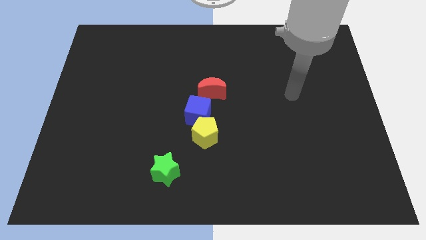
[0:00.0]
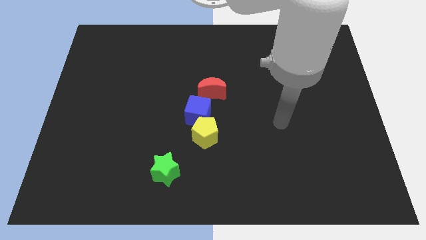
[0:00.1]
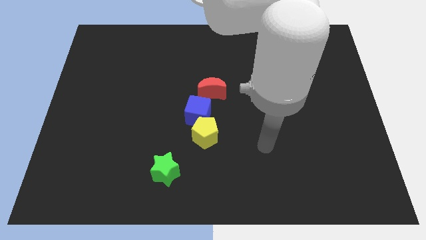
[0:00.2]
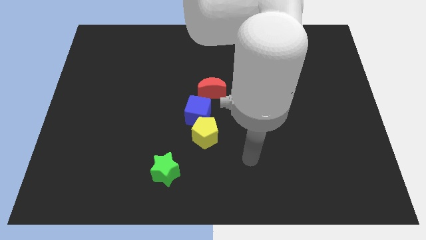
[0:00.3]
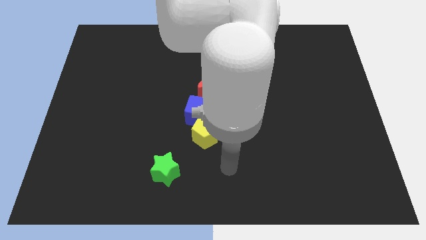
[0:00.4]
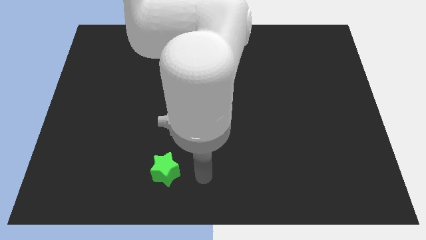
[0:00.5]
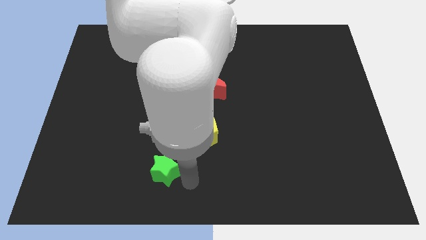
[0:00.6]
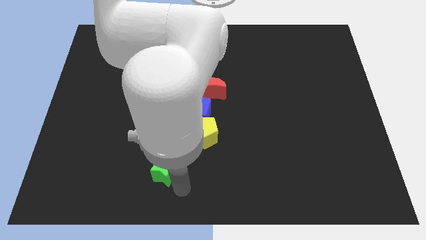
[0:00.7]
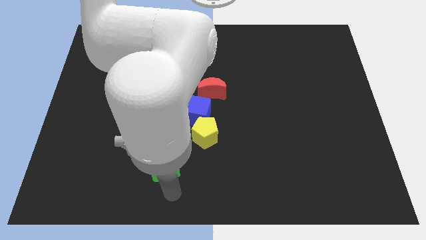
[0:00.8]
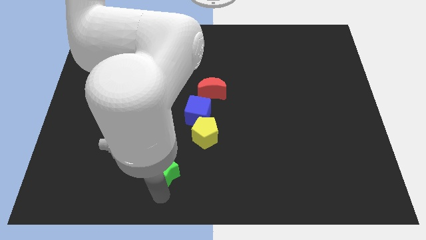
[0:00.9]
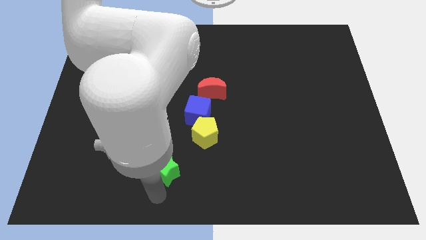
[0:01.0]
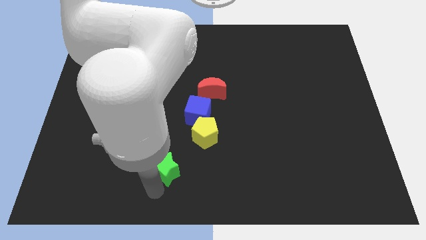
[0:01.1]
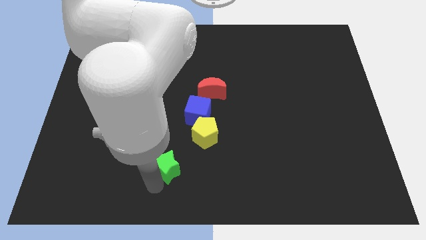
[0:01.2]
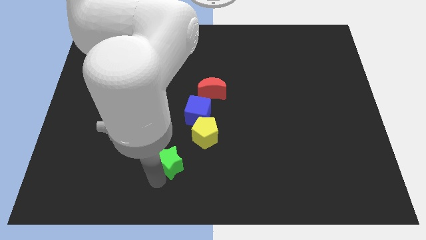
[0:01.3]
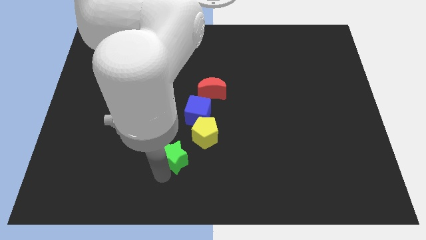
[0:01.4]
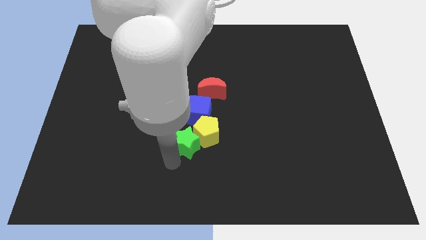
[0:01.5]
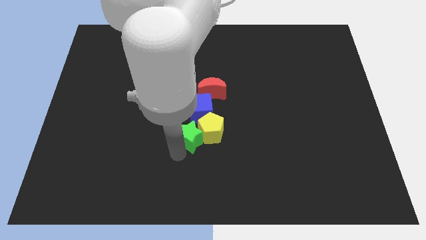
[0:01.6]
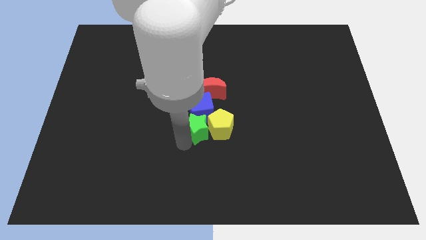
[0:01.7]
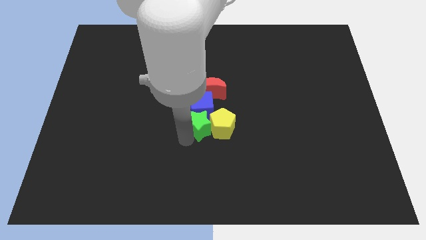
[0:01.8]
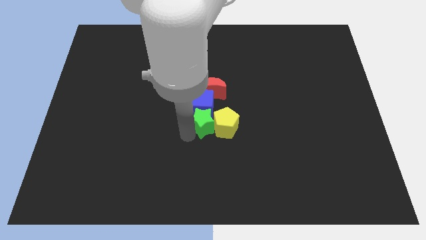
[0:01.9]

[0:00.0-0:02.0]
move the green star next to the cube

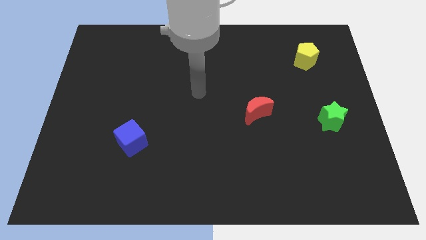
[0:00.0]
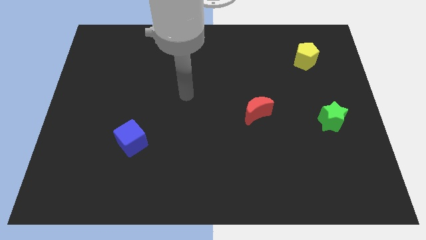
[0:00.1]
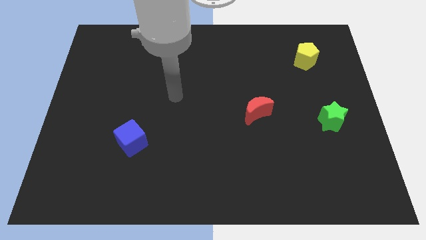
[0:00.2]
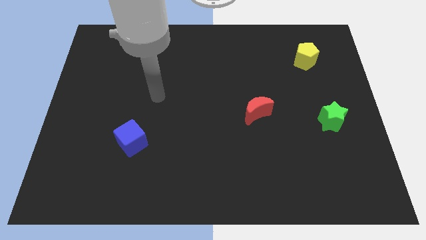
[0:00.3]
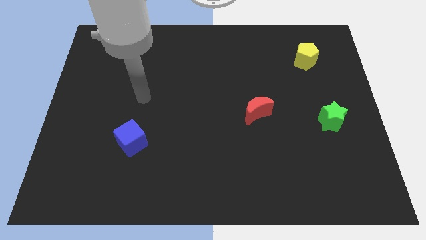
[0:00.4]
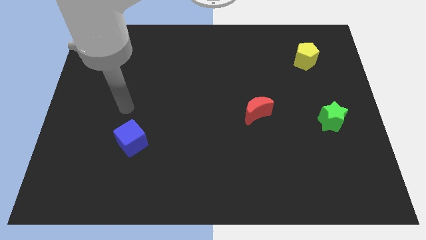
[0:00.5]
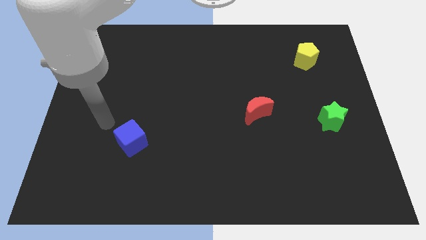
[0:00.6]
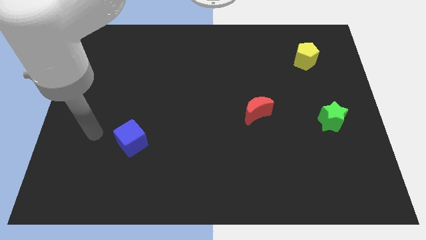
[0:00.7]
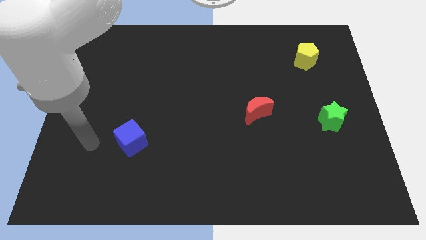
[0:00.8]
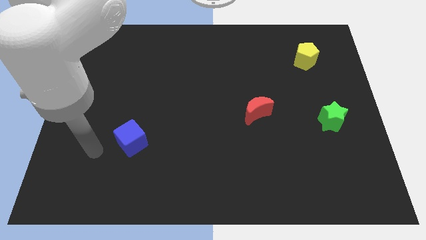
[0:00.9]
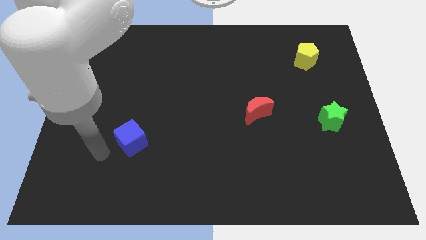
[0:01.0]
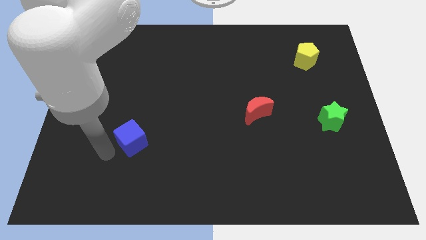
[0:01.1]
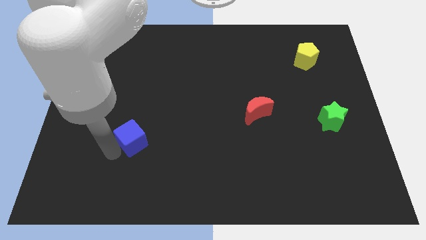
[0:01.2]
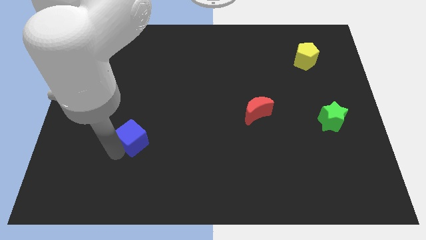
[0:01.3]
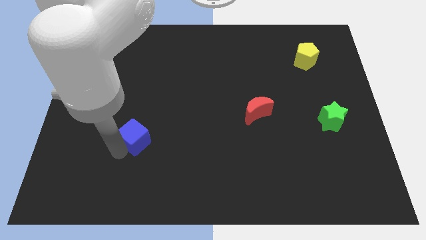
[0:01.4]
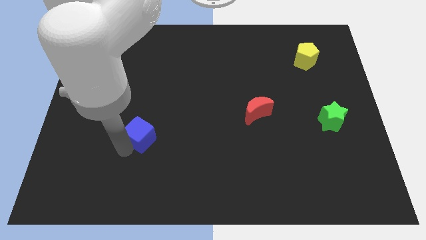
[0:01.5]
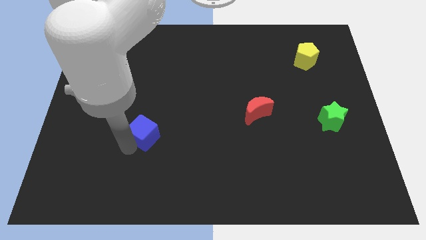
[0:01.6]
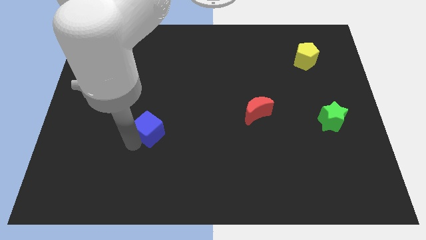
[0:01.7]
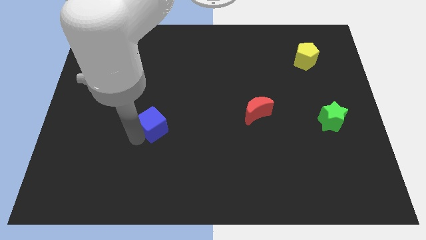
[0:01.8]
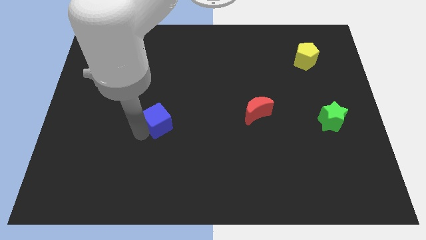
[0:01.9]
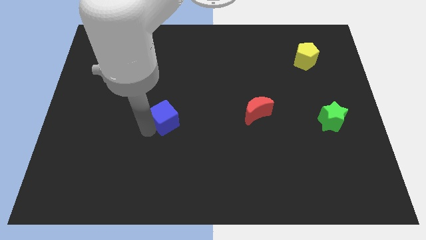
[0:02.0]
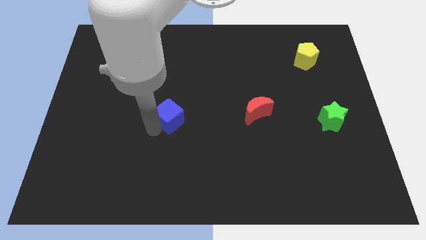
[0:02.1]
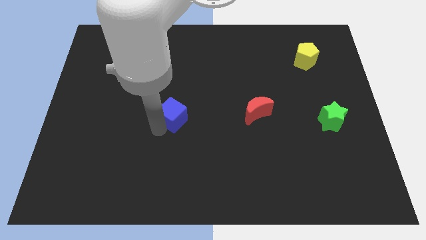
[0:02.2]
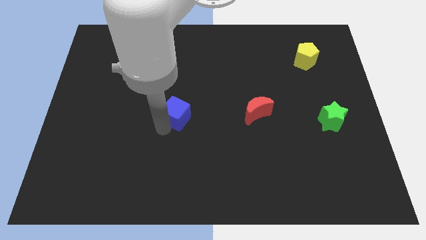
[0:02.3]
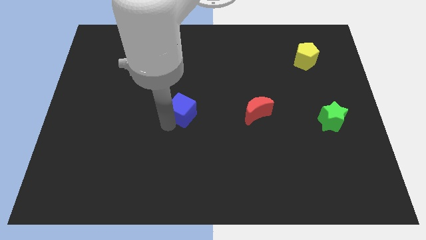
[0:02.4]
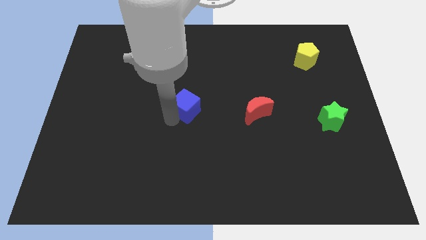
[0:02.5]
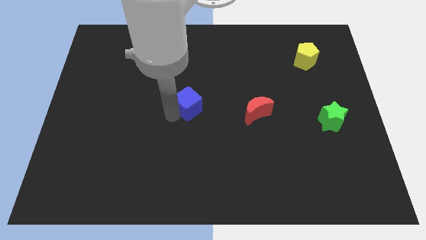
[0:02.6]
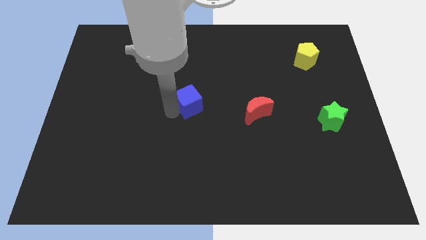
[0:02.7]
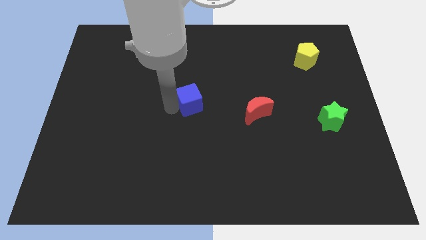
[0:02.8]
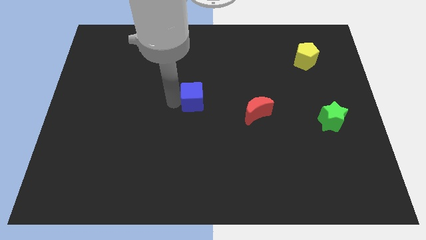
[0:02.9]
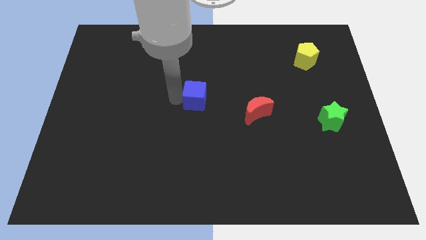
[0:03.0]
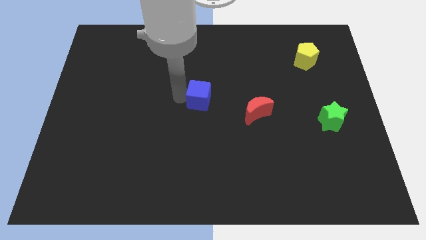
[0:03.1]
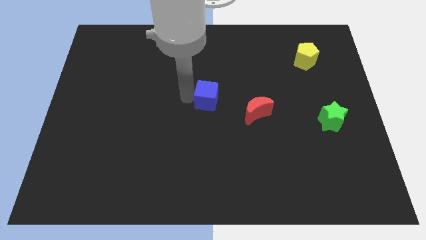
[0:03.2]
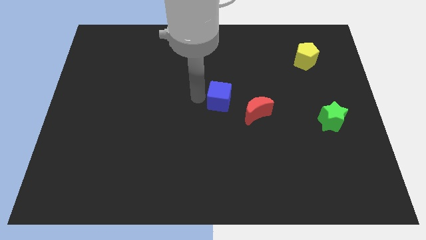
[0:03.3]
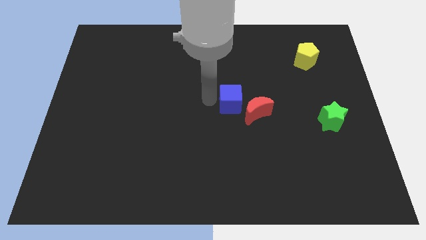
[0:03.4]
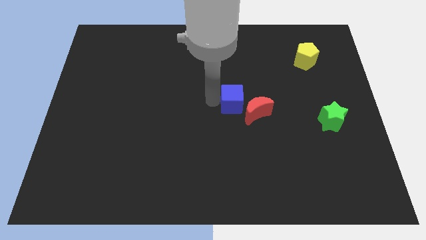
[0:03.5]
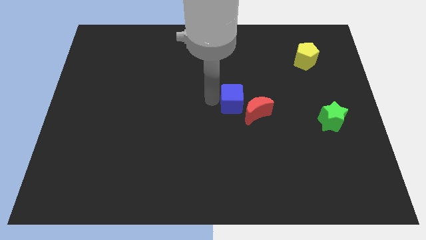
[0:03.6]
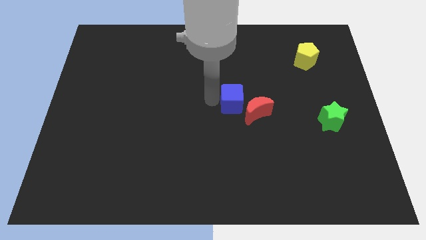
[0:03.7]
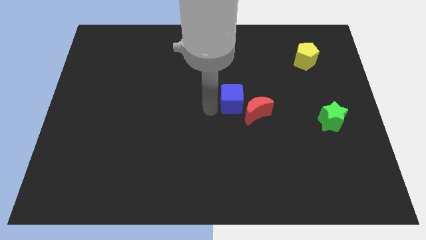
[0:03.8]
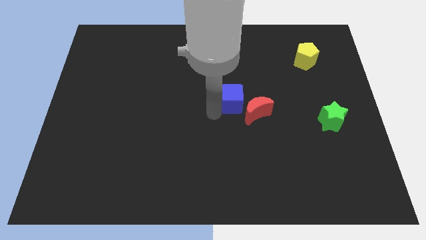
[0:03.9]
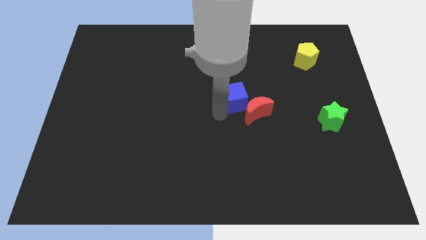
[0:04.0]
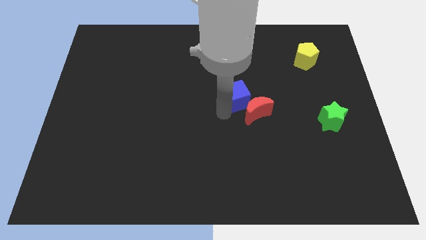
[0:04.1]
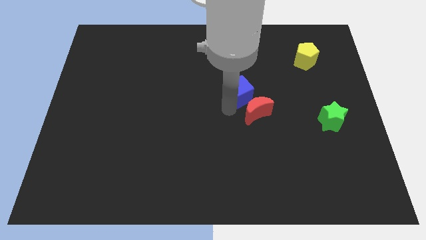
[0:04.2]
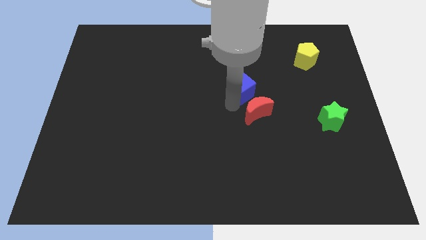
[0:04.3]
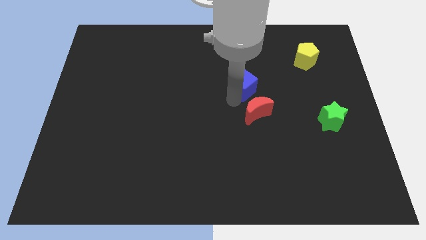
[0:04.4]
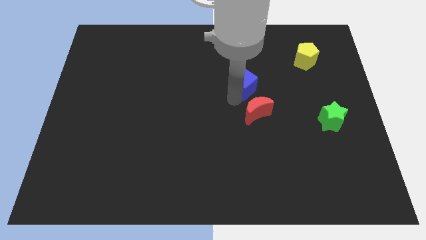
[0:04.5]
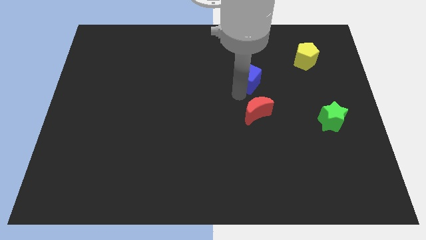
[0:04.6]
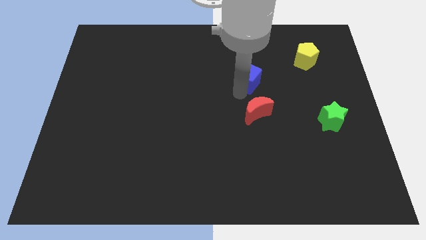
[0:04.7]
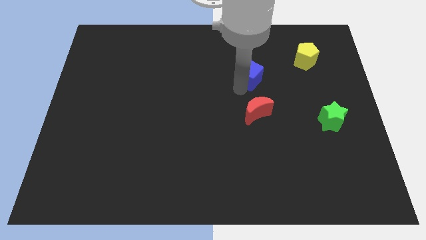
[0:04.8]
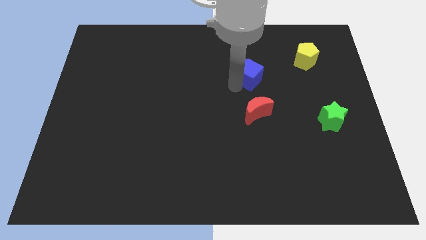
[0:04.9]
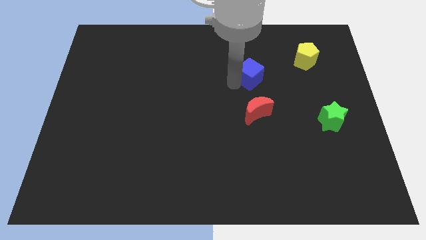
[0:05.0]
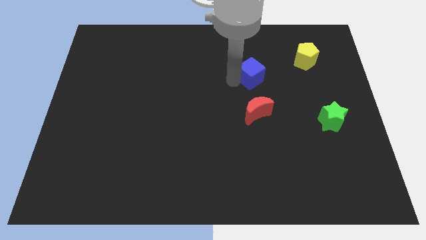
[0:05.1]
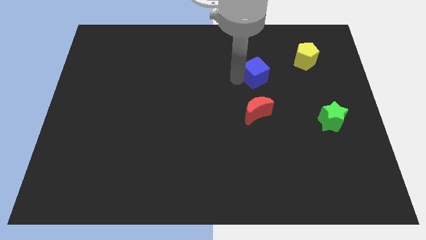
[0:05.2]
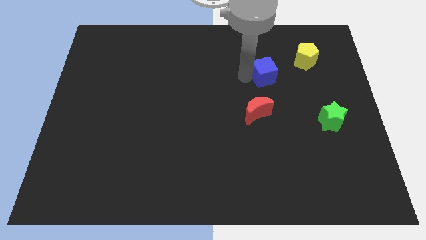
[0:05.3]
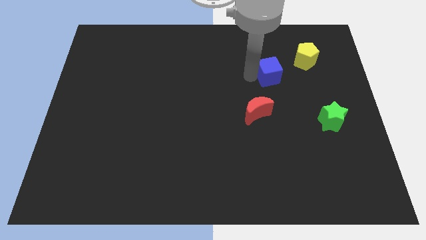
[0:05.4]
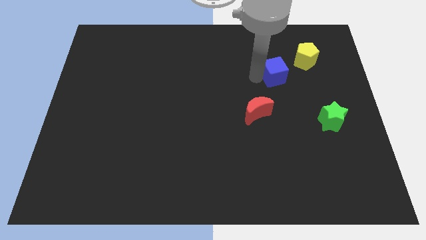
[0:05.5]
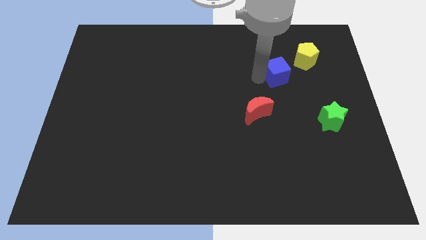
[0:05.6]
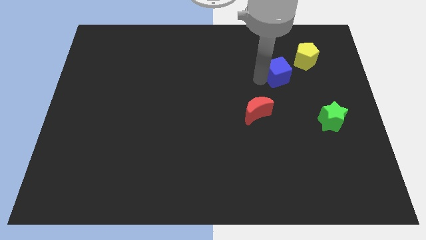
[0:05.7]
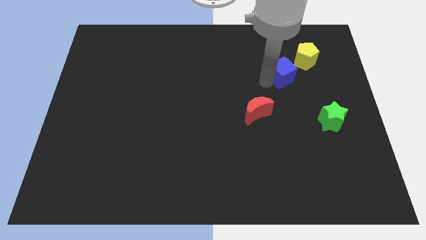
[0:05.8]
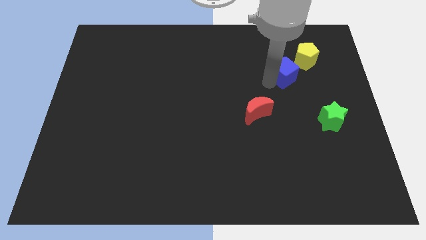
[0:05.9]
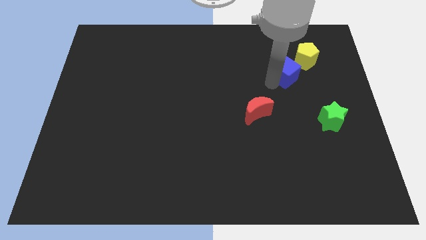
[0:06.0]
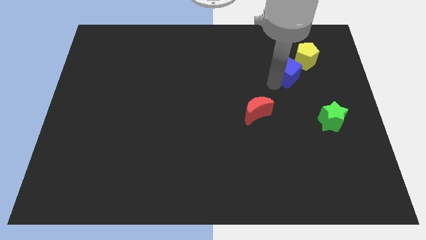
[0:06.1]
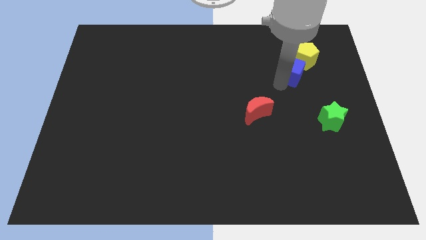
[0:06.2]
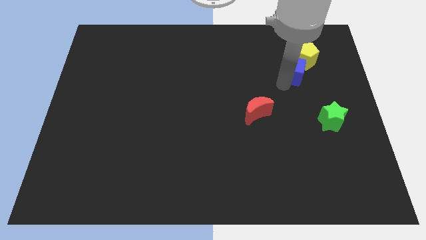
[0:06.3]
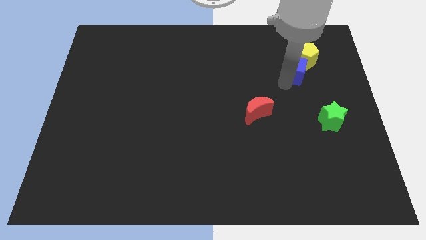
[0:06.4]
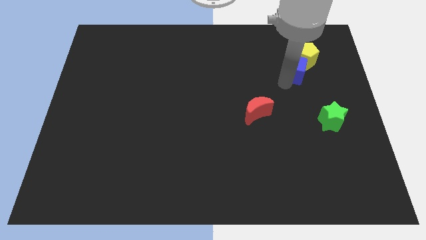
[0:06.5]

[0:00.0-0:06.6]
move the blue cube towards the pentagon
